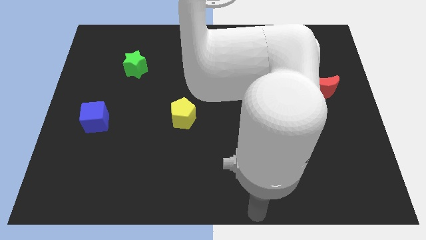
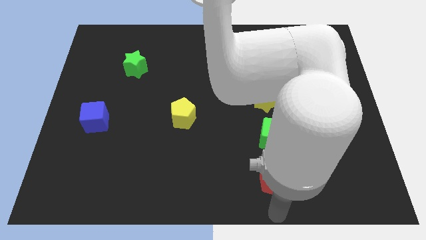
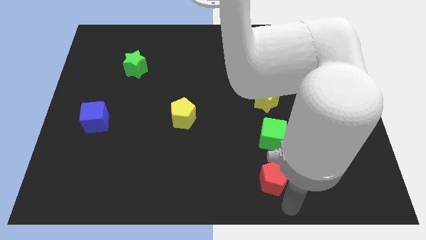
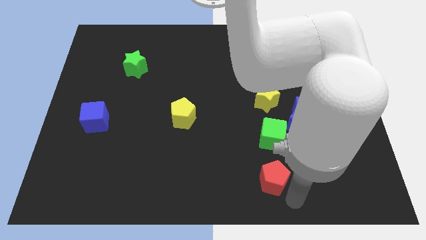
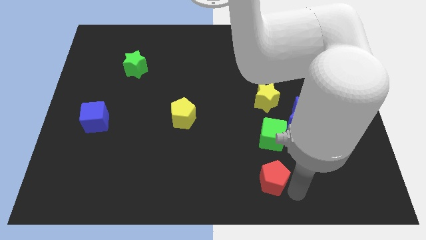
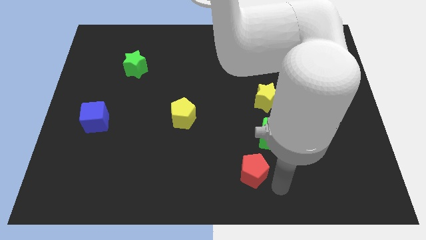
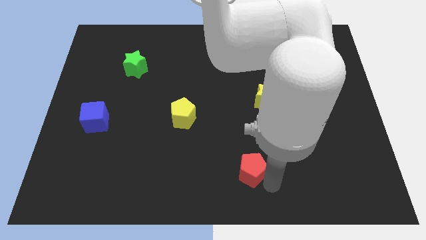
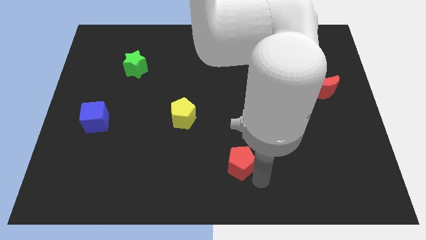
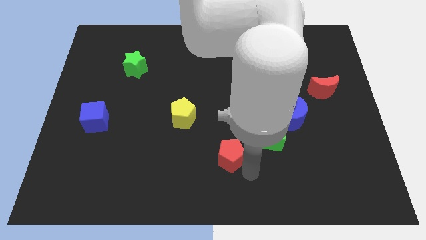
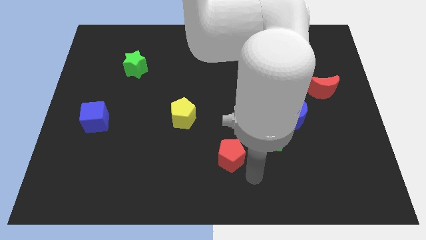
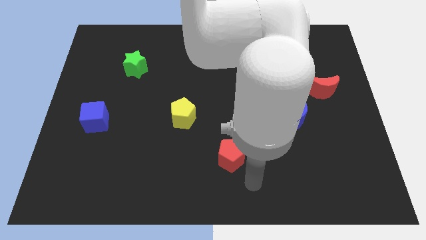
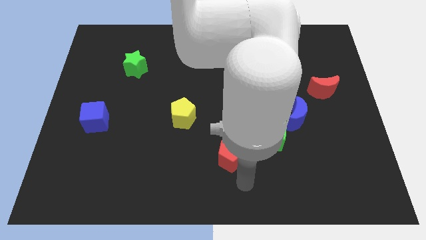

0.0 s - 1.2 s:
push red pentagon to the bottom left of green cube

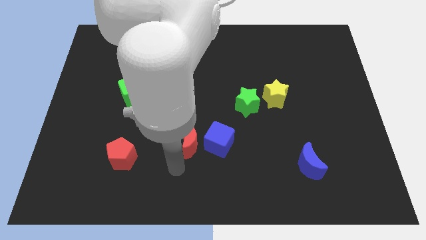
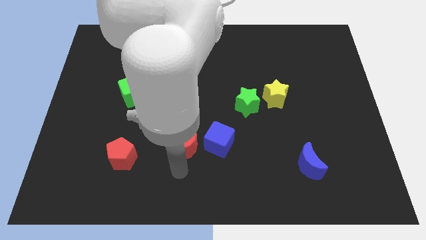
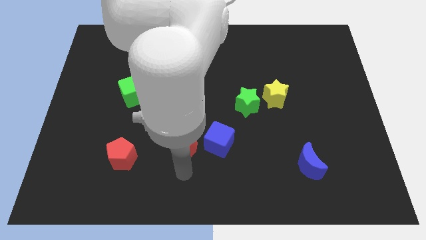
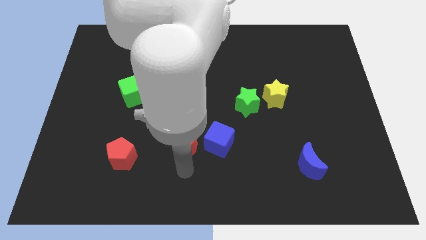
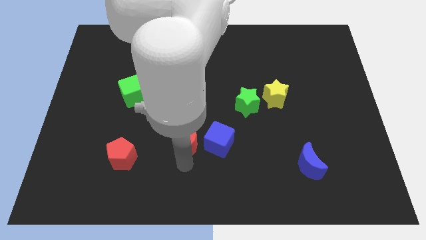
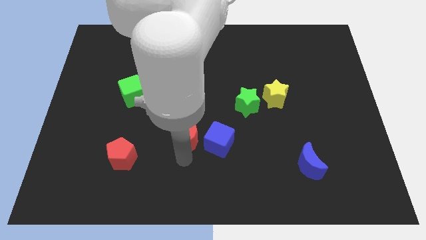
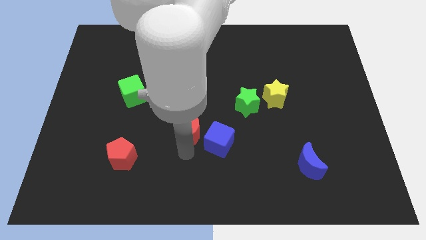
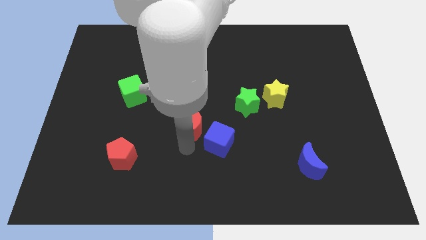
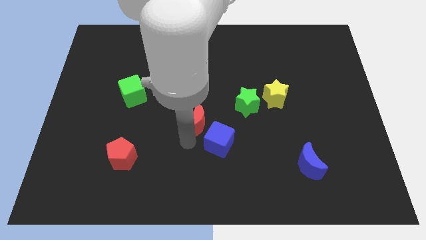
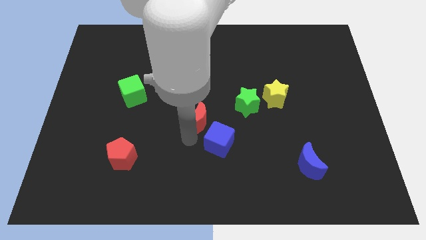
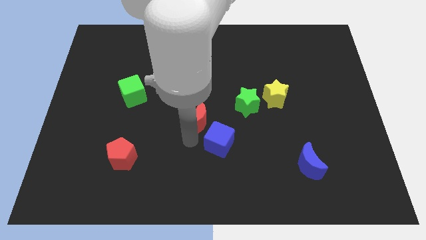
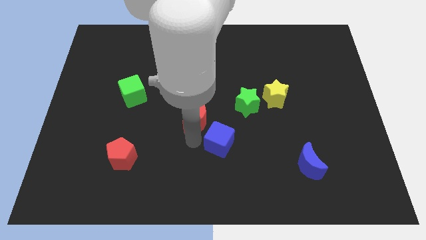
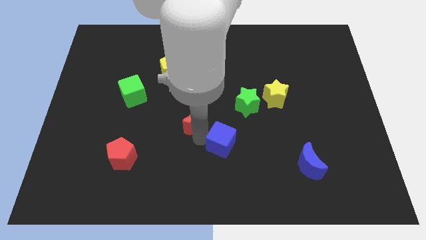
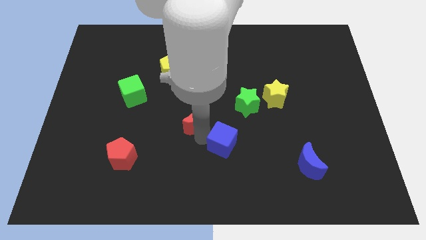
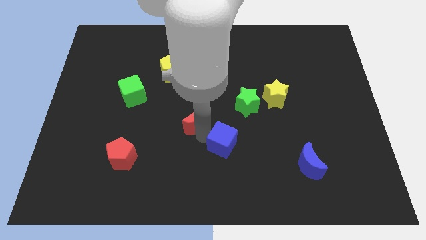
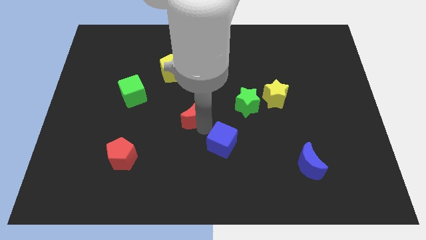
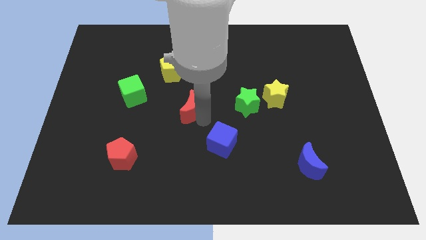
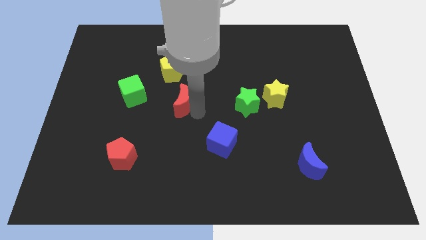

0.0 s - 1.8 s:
push the red crescent towards the top slightly

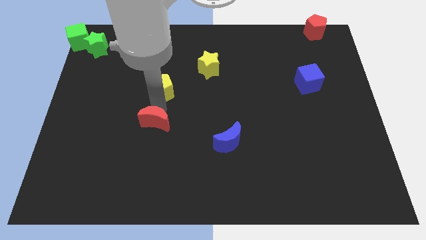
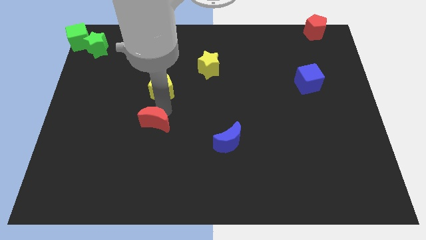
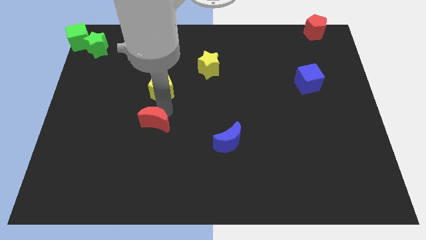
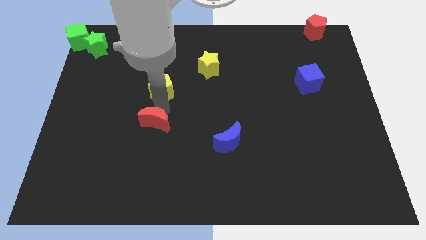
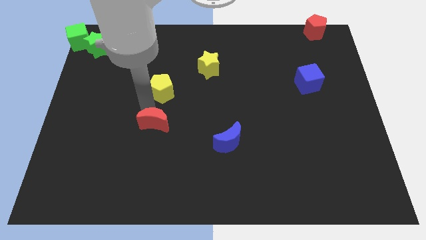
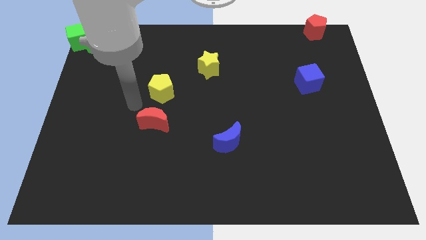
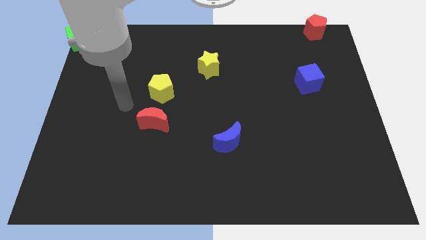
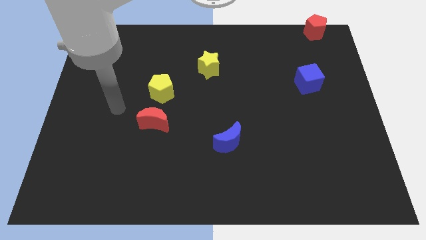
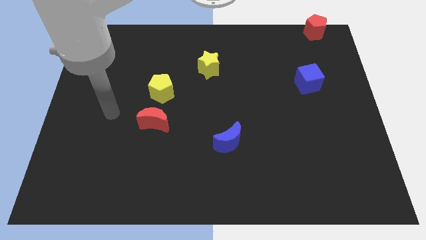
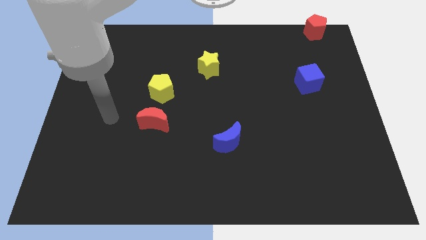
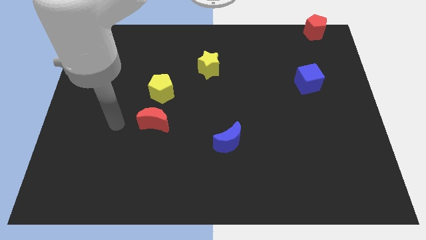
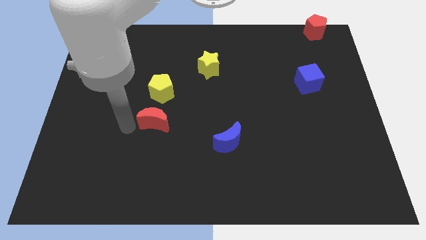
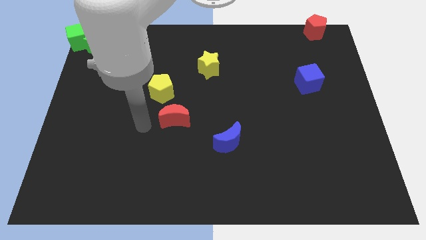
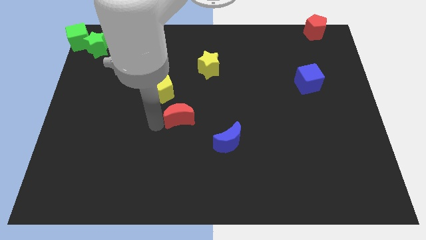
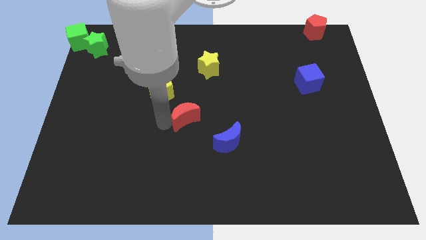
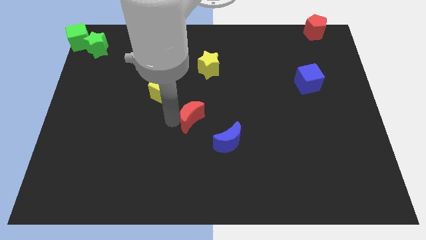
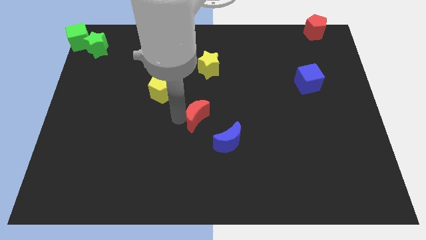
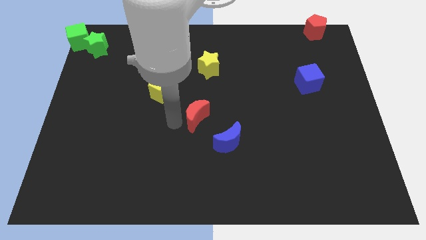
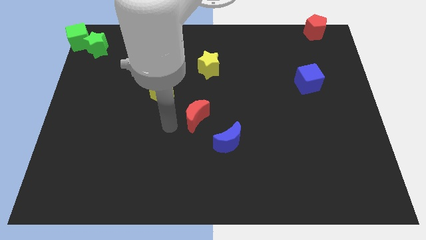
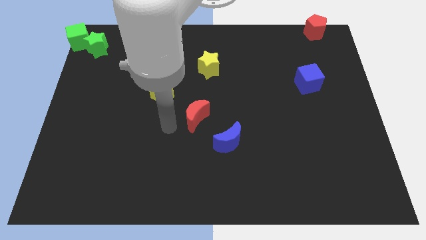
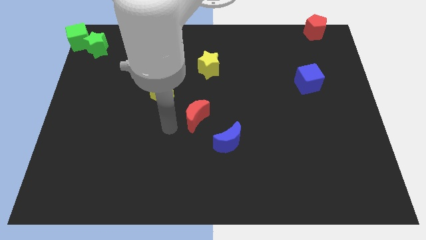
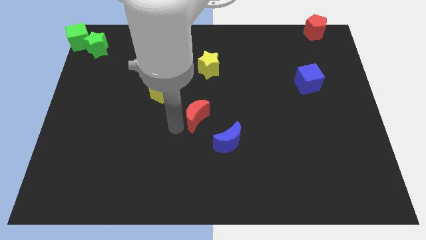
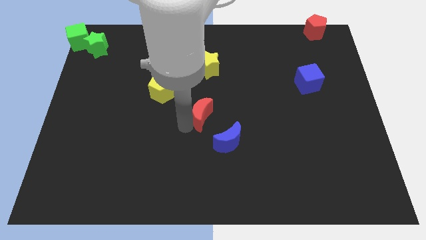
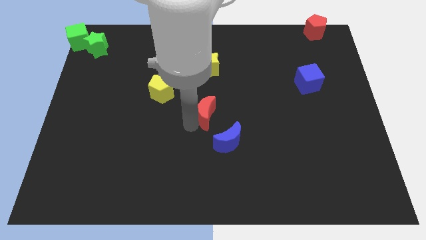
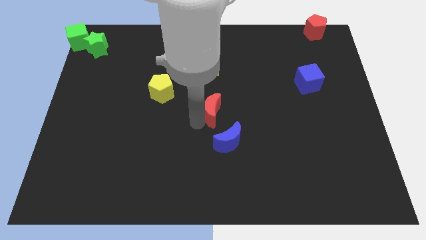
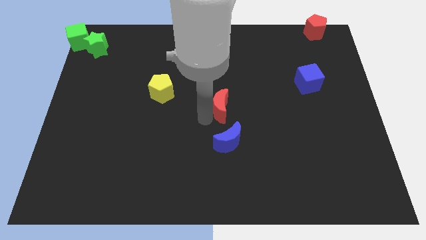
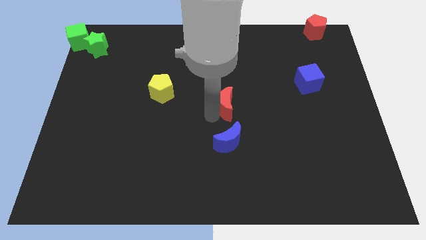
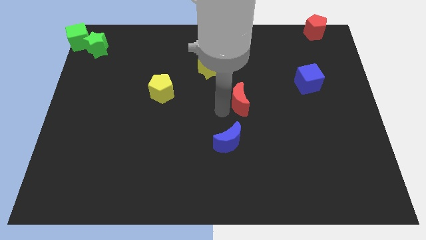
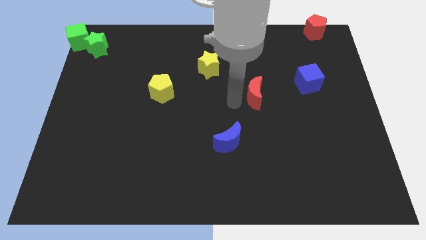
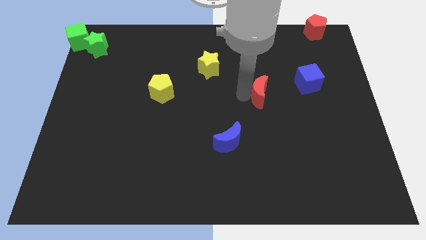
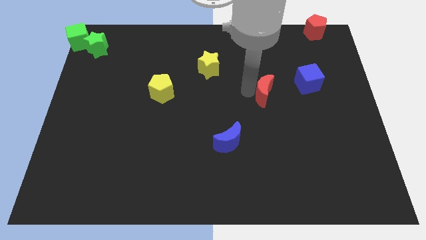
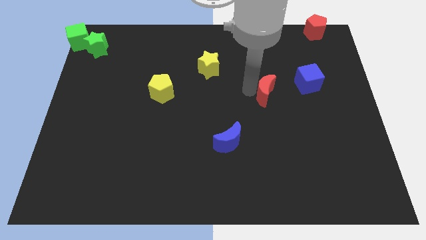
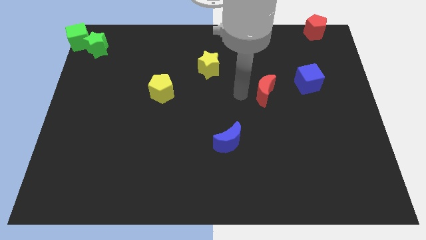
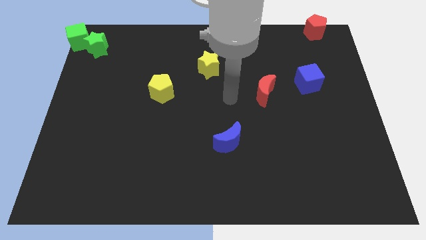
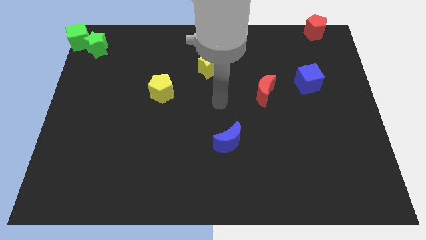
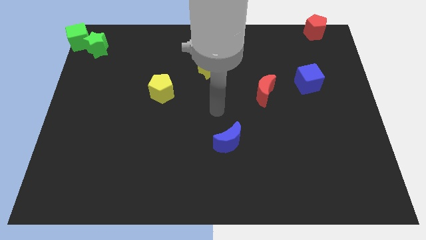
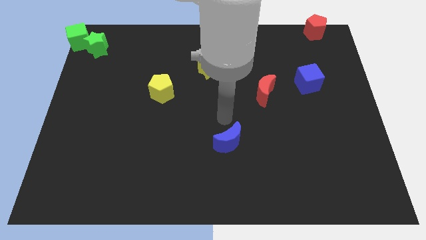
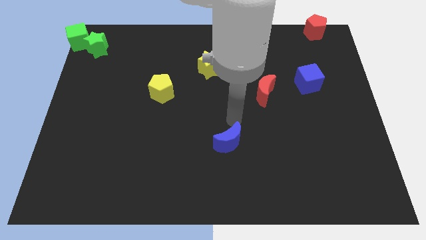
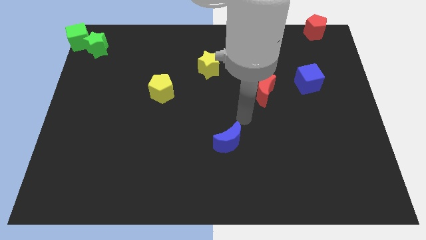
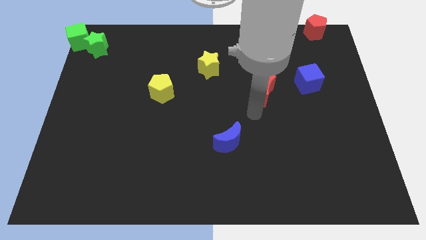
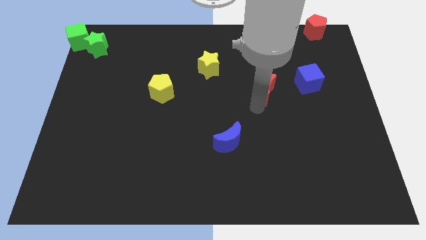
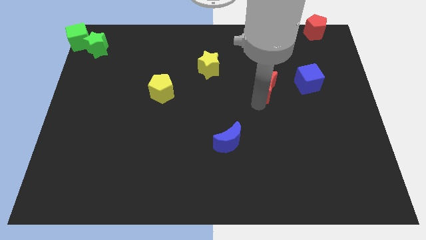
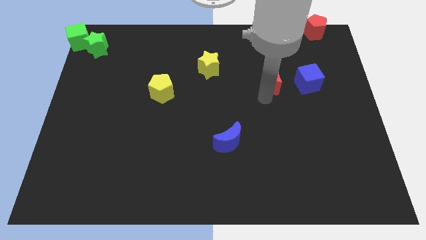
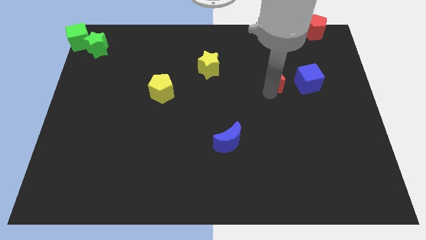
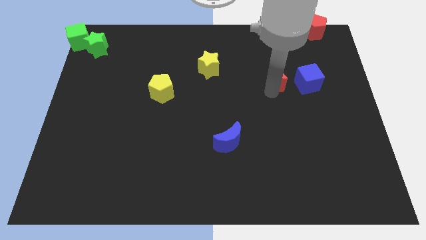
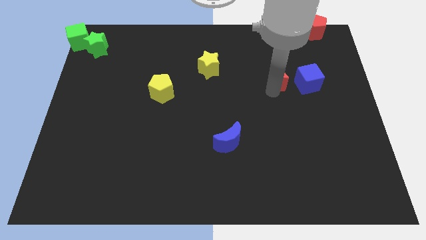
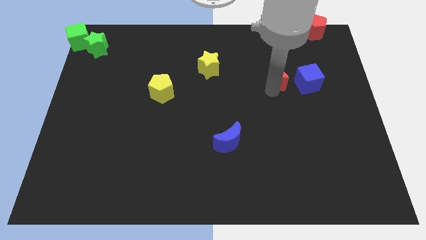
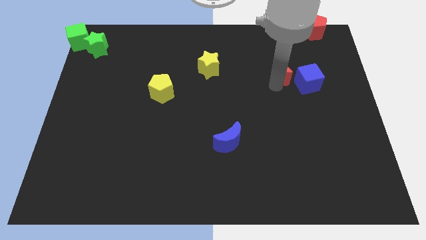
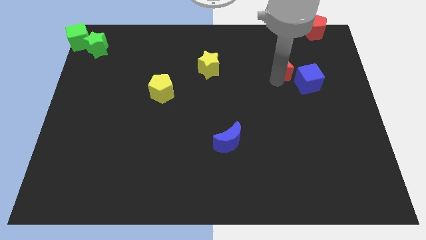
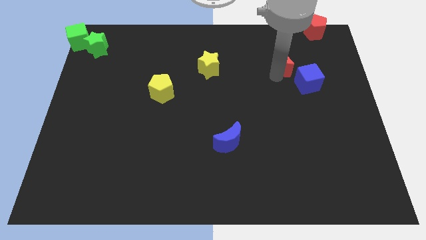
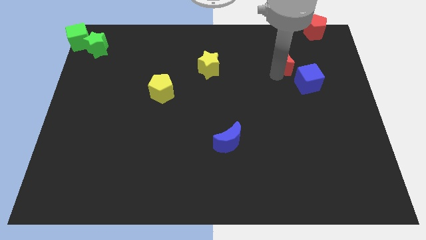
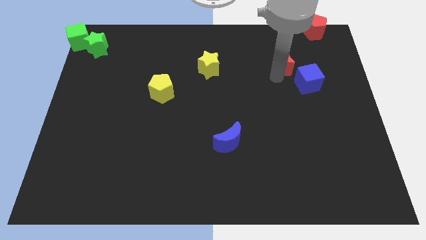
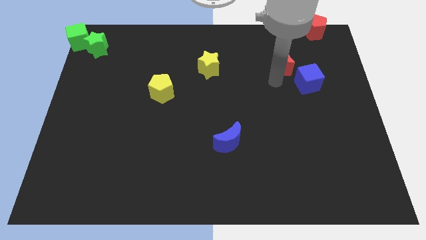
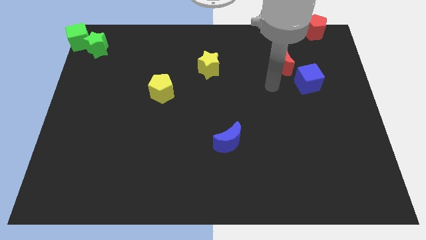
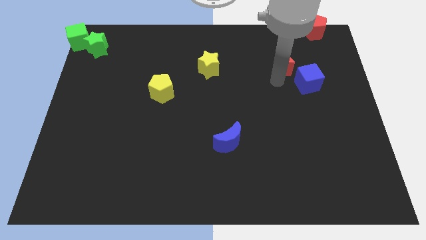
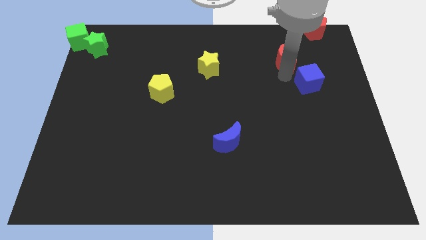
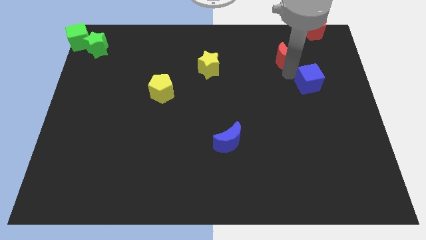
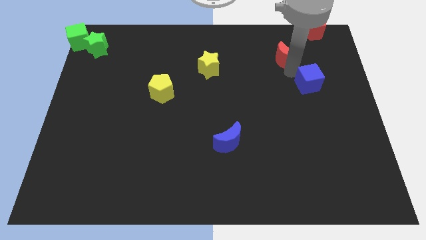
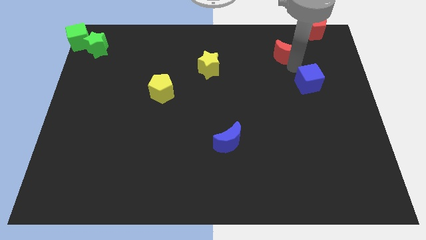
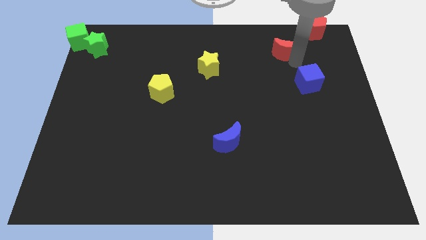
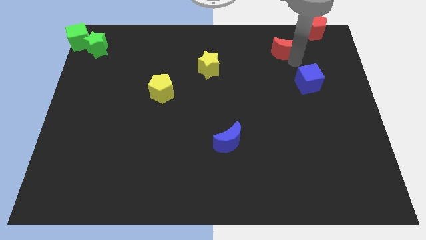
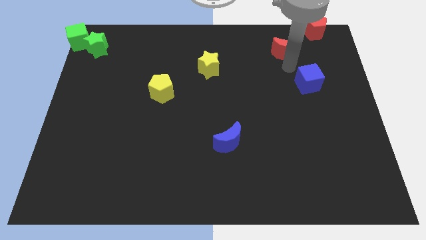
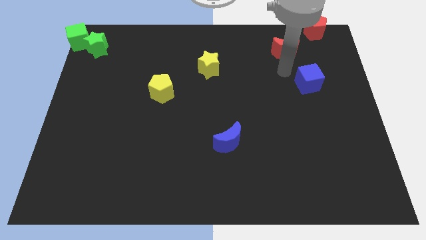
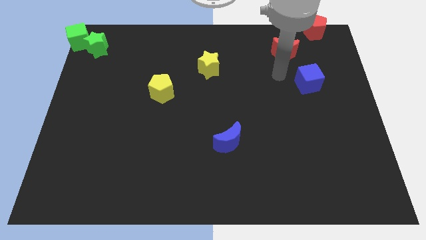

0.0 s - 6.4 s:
move the red moon to the top left of the blue cube
